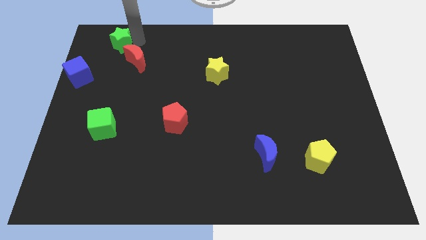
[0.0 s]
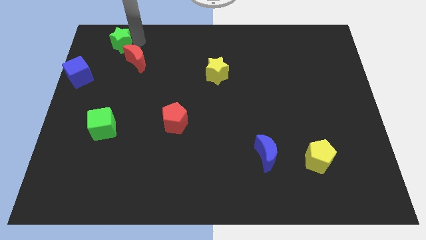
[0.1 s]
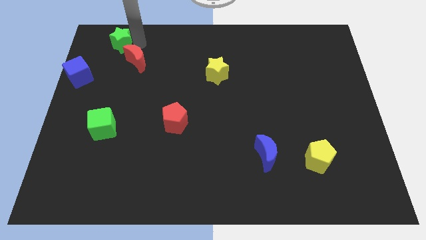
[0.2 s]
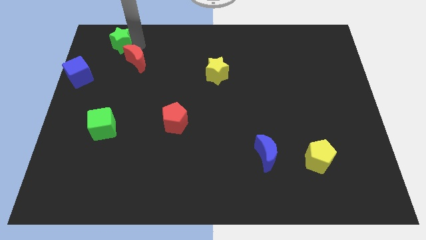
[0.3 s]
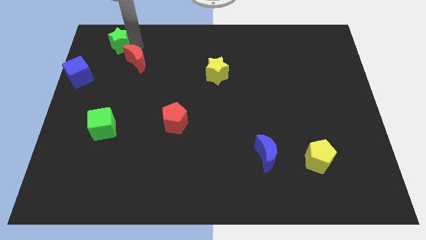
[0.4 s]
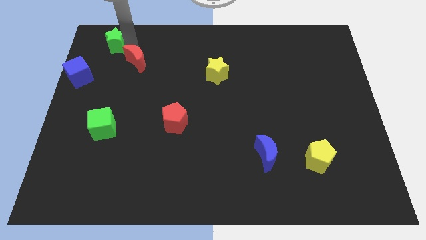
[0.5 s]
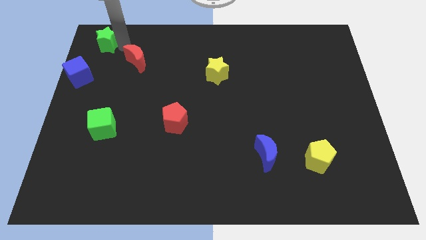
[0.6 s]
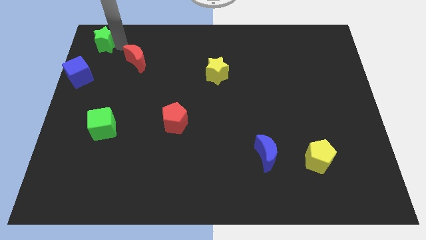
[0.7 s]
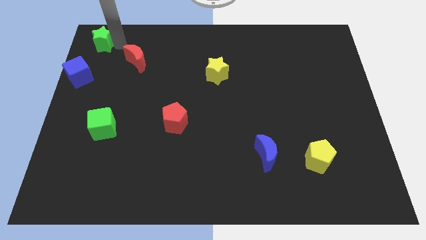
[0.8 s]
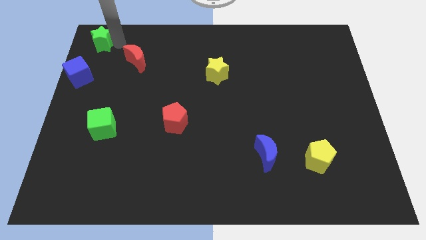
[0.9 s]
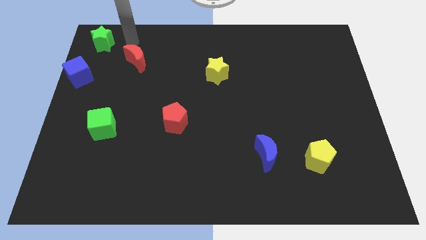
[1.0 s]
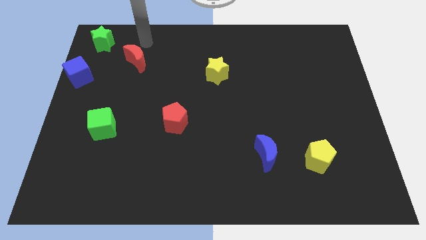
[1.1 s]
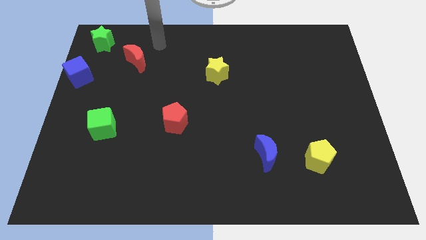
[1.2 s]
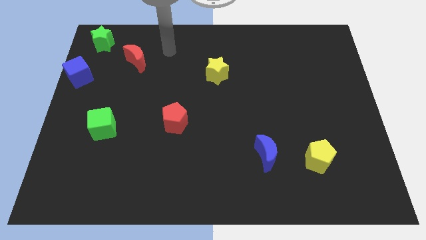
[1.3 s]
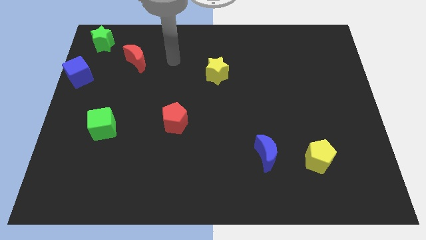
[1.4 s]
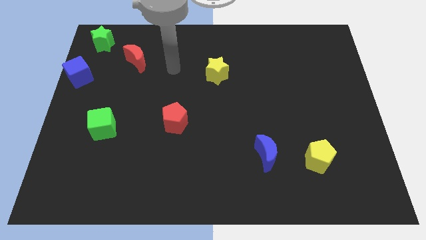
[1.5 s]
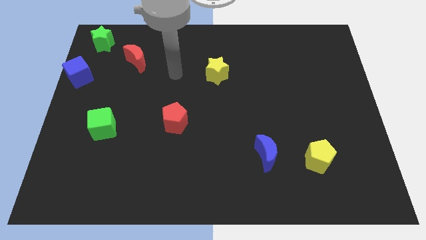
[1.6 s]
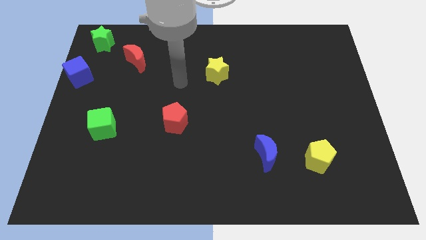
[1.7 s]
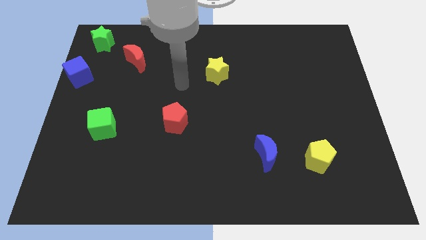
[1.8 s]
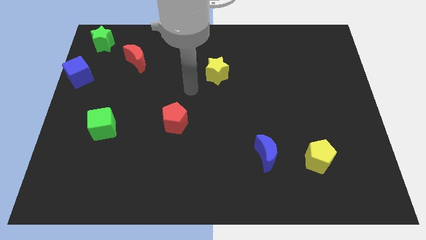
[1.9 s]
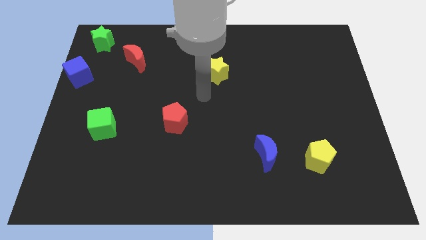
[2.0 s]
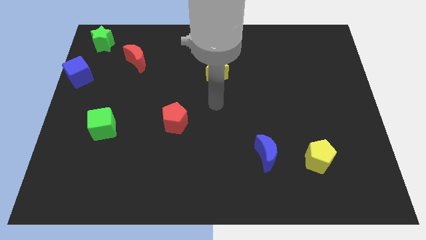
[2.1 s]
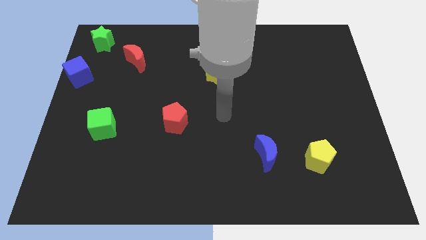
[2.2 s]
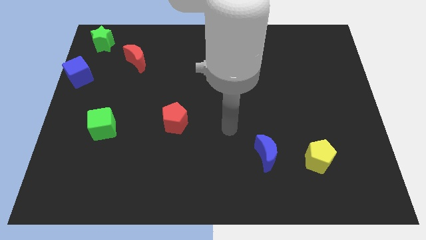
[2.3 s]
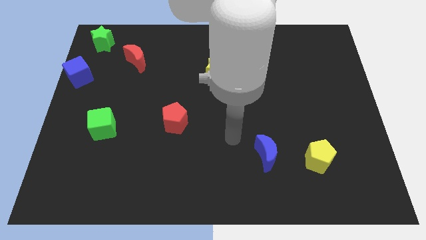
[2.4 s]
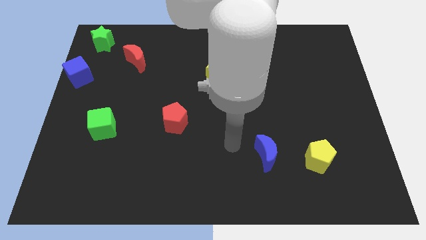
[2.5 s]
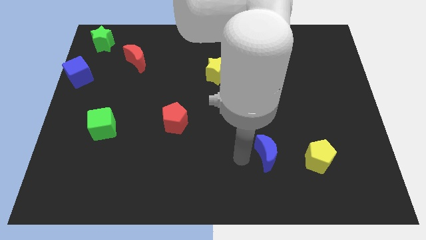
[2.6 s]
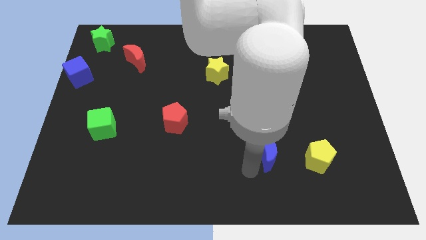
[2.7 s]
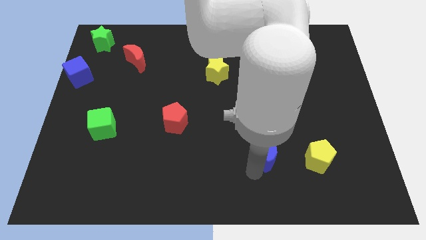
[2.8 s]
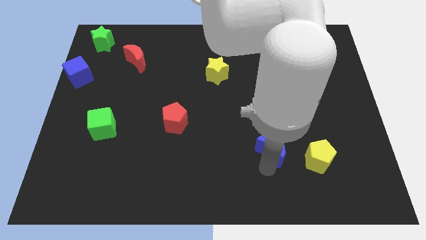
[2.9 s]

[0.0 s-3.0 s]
move the blue moon upwards

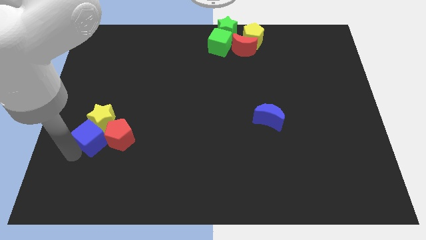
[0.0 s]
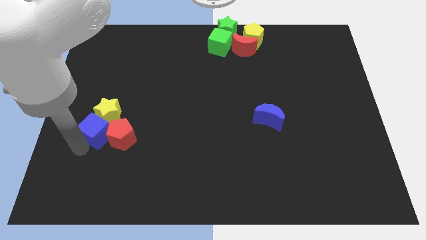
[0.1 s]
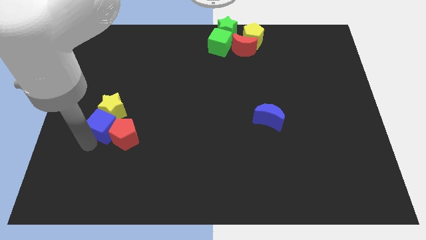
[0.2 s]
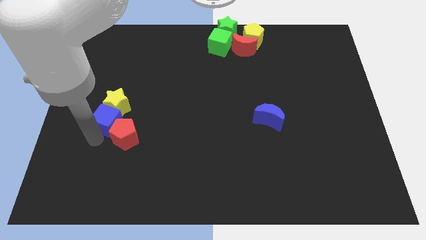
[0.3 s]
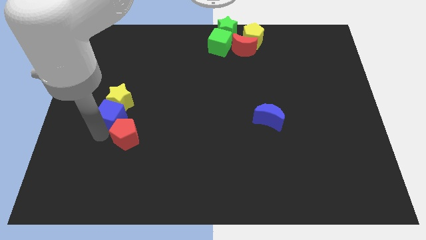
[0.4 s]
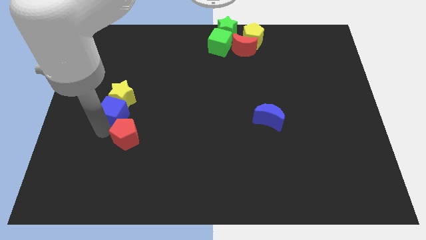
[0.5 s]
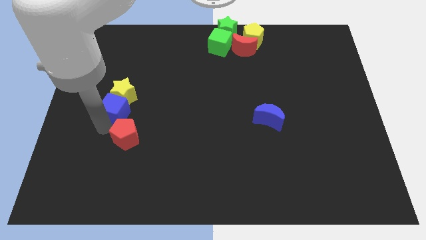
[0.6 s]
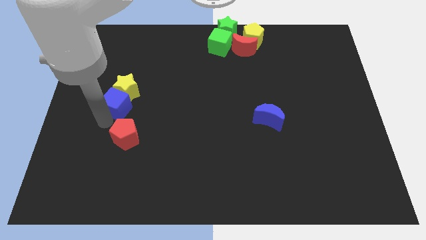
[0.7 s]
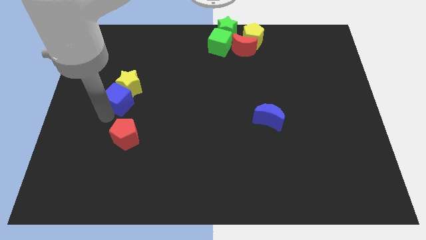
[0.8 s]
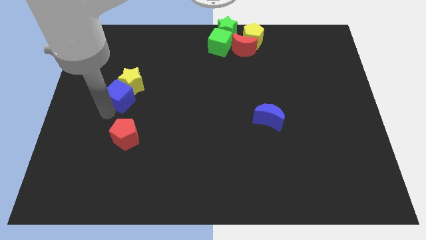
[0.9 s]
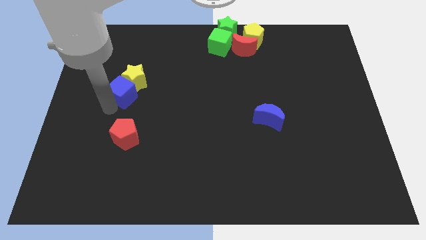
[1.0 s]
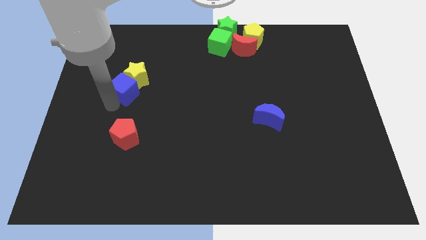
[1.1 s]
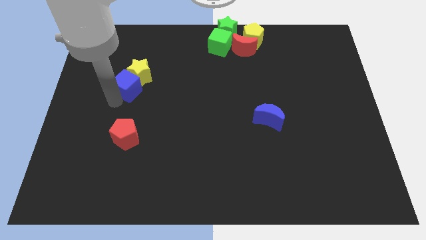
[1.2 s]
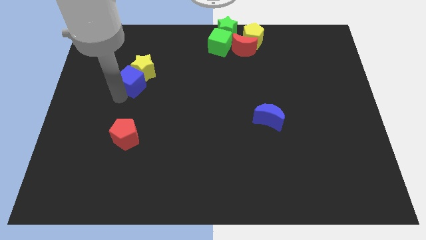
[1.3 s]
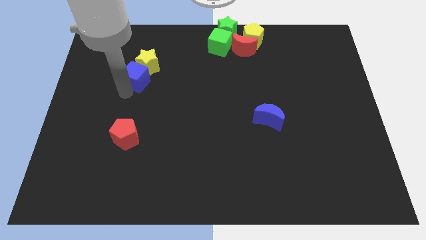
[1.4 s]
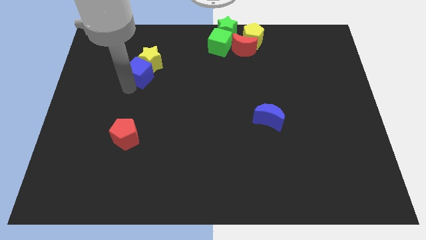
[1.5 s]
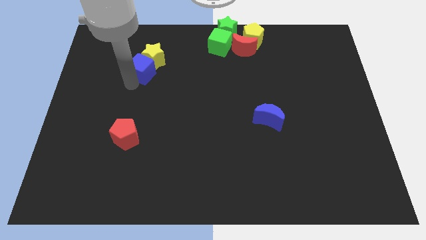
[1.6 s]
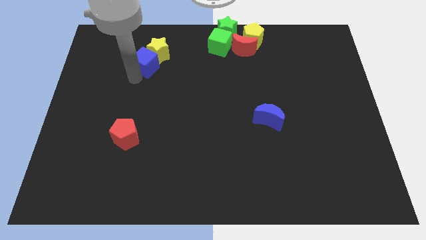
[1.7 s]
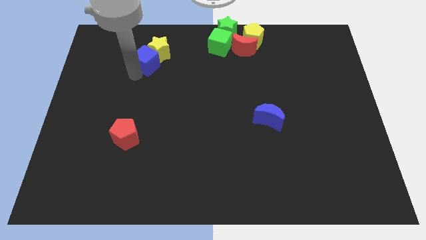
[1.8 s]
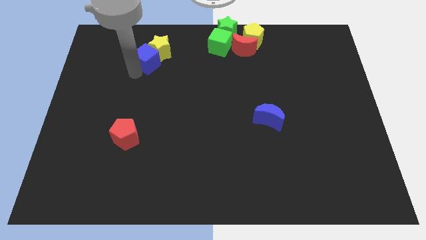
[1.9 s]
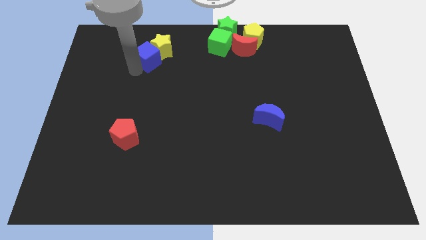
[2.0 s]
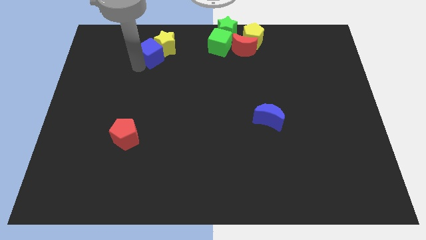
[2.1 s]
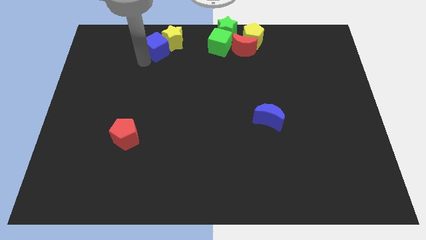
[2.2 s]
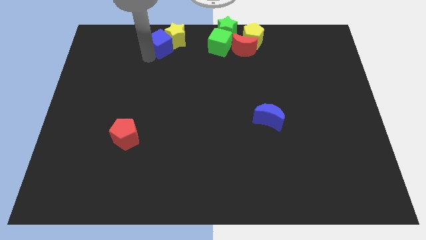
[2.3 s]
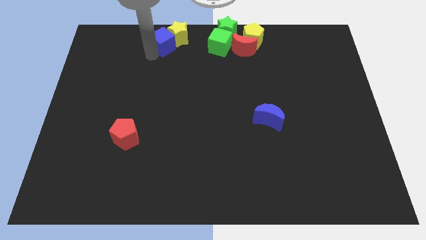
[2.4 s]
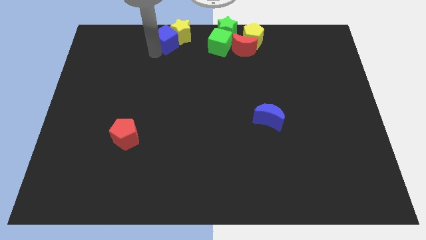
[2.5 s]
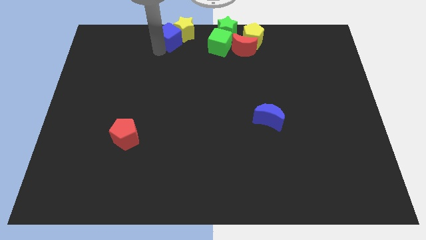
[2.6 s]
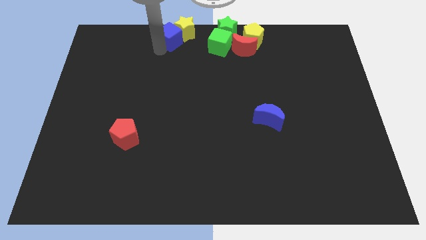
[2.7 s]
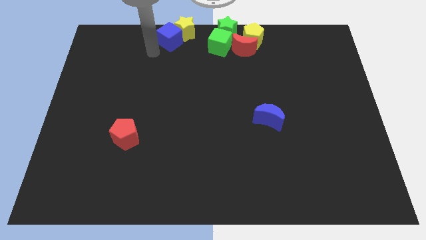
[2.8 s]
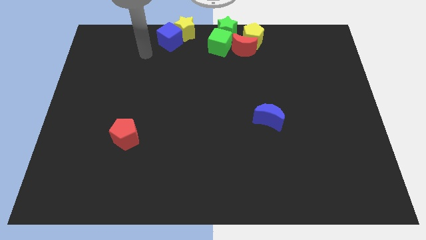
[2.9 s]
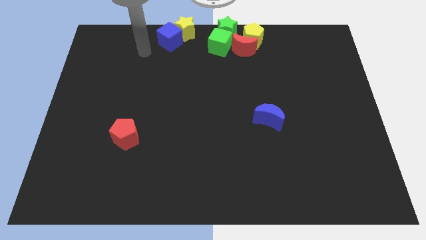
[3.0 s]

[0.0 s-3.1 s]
move blue cube and yellow star to the top center of the board

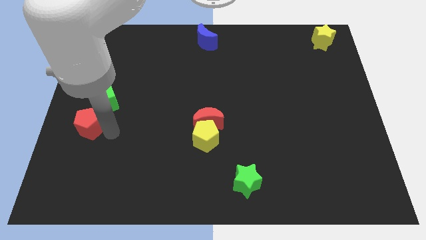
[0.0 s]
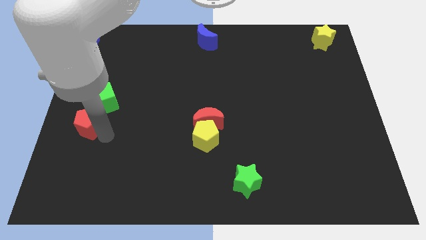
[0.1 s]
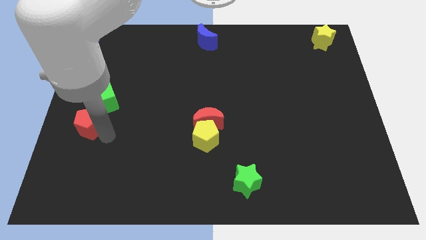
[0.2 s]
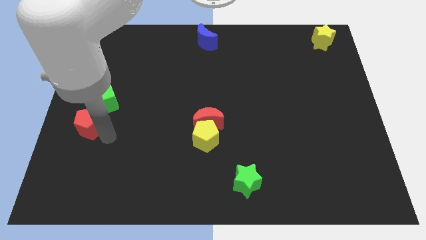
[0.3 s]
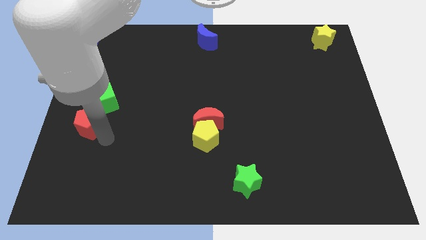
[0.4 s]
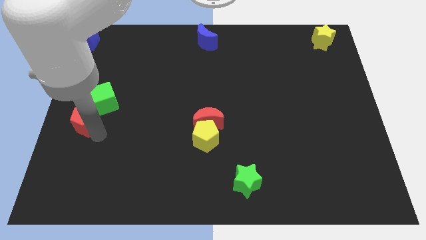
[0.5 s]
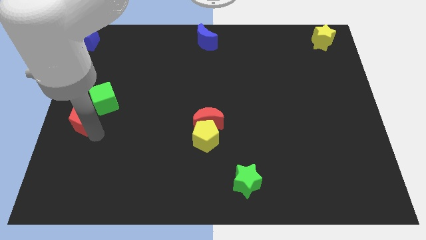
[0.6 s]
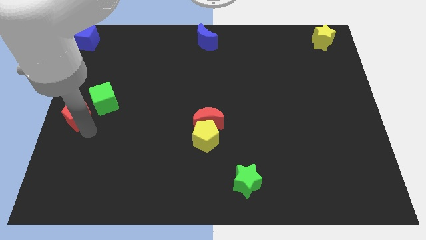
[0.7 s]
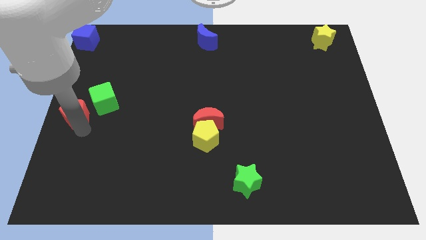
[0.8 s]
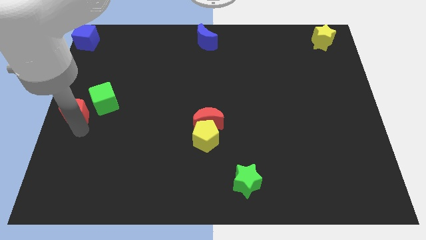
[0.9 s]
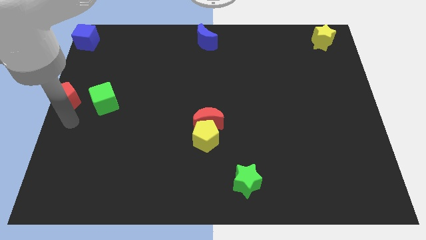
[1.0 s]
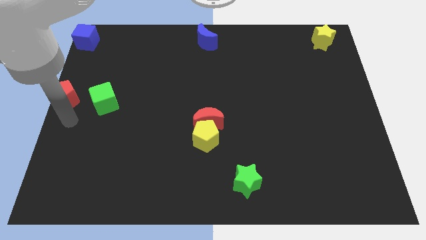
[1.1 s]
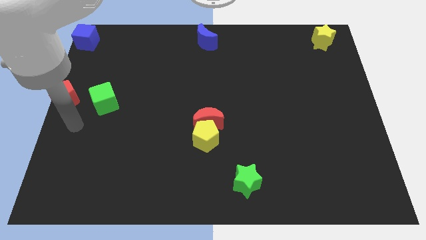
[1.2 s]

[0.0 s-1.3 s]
place the red pentagon to the left of the green cube

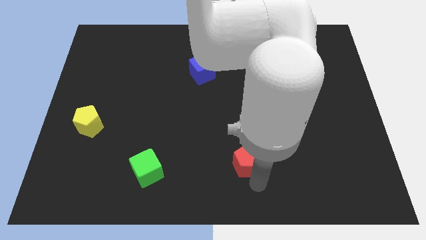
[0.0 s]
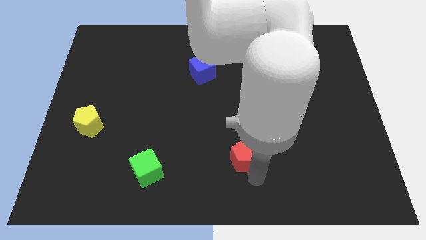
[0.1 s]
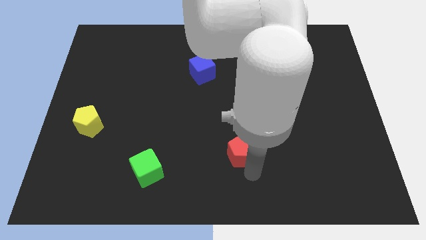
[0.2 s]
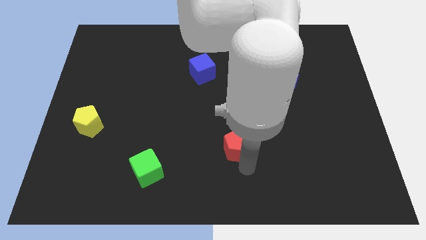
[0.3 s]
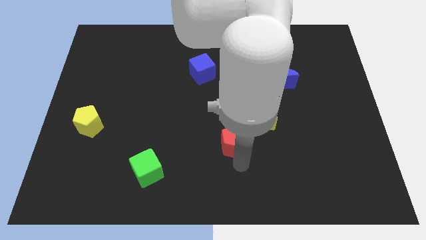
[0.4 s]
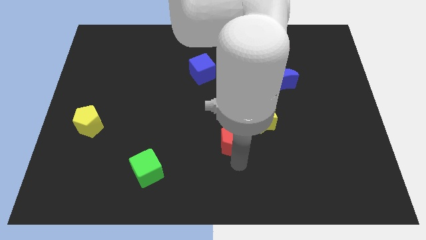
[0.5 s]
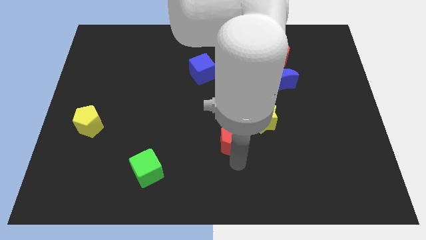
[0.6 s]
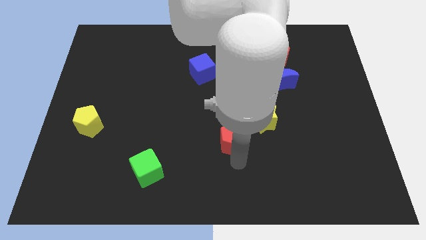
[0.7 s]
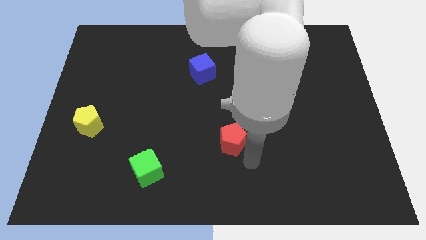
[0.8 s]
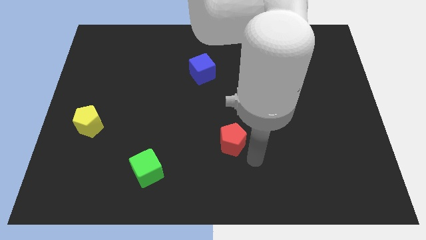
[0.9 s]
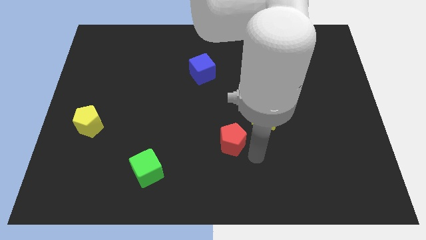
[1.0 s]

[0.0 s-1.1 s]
place the red pentagon to the center

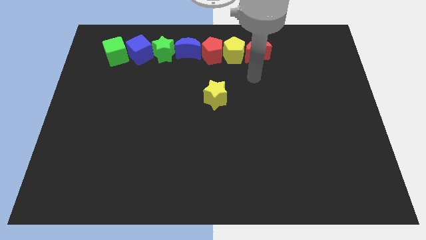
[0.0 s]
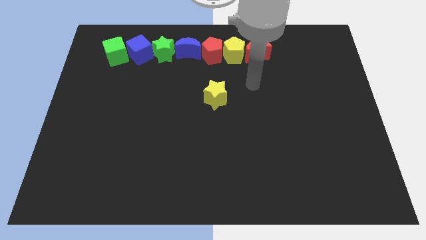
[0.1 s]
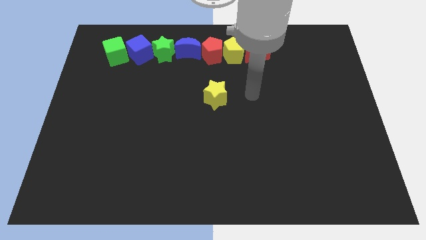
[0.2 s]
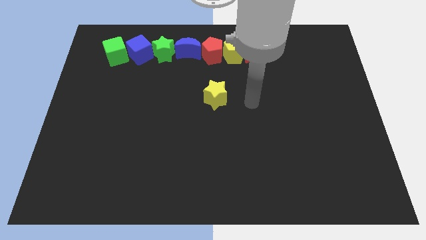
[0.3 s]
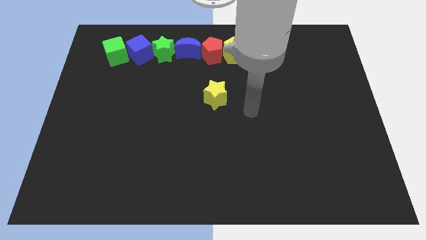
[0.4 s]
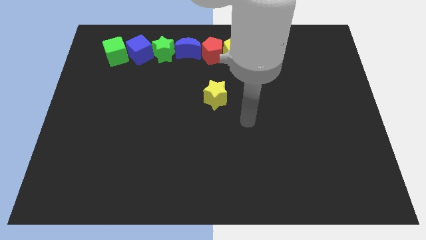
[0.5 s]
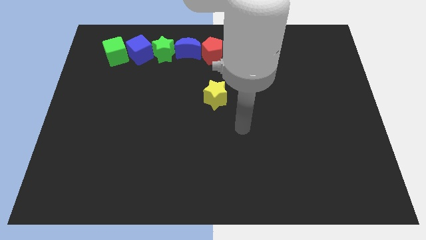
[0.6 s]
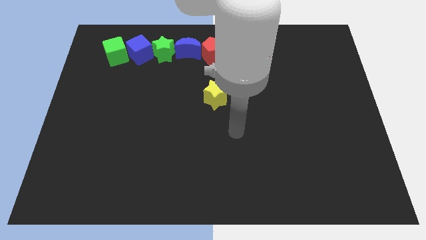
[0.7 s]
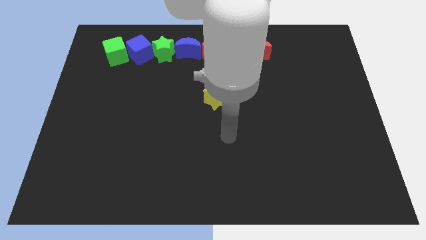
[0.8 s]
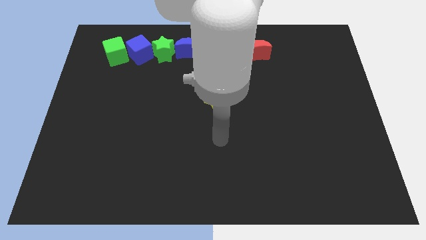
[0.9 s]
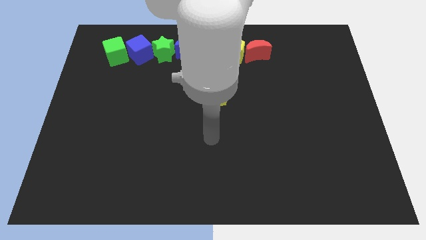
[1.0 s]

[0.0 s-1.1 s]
place the arm below the yellow star
